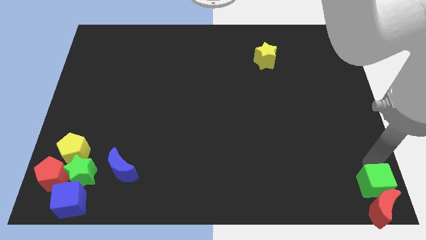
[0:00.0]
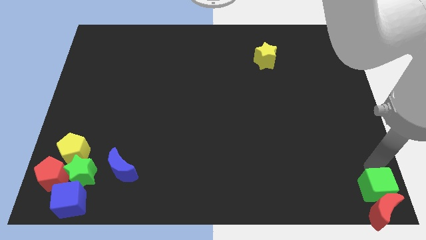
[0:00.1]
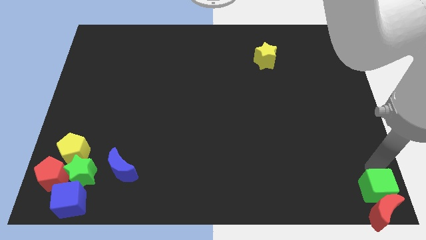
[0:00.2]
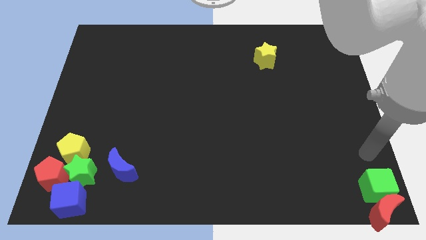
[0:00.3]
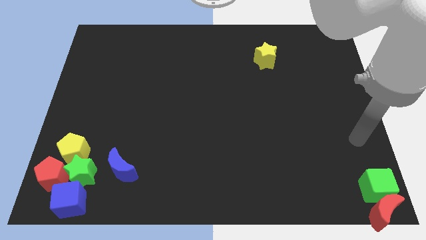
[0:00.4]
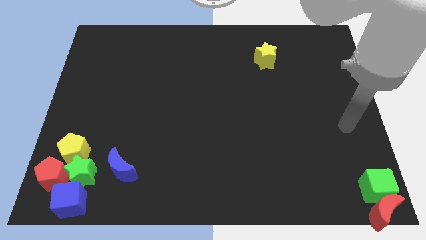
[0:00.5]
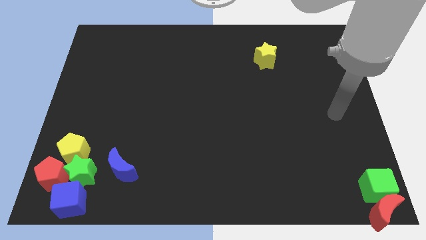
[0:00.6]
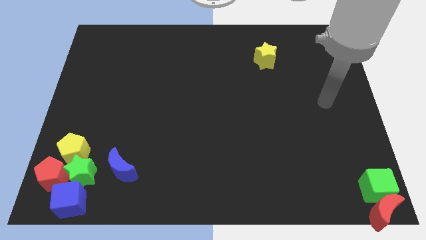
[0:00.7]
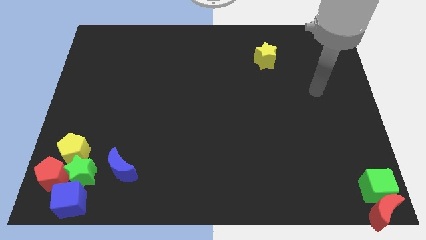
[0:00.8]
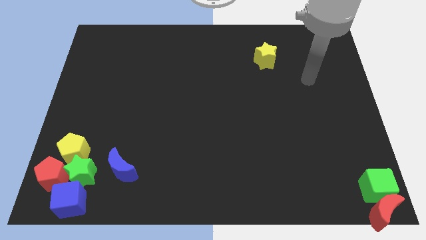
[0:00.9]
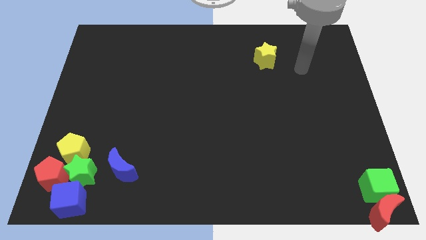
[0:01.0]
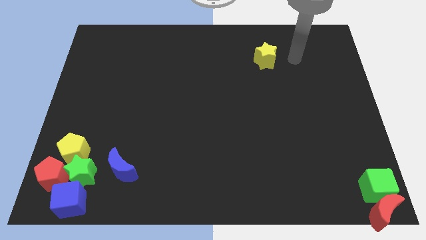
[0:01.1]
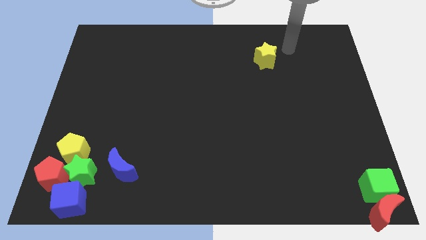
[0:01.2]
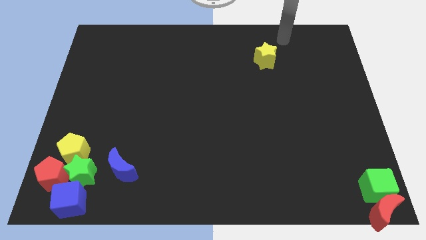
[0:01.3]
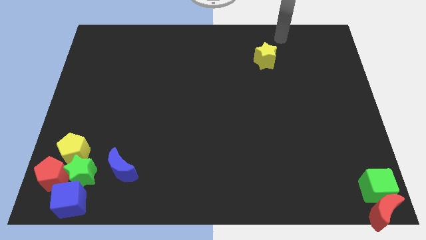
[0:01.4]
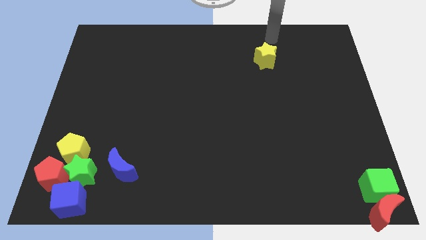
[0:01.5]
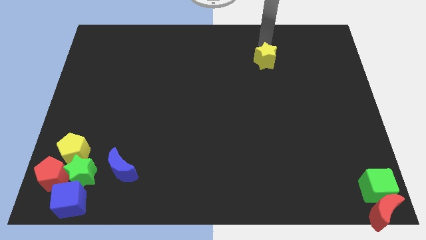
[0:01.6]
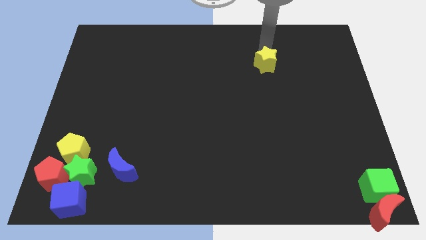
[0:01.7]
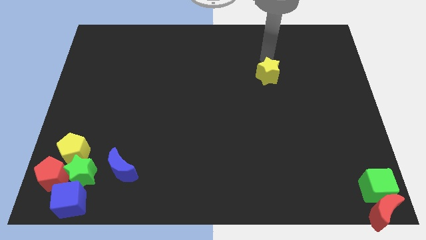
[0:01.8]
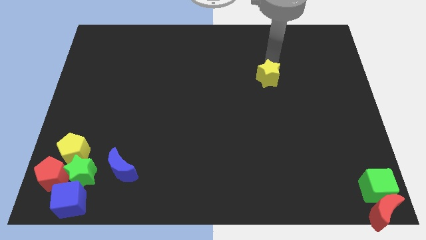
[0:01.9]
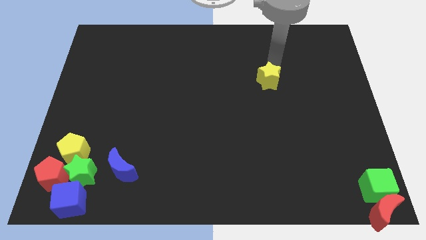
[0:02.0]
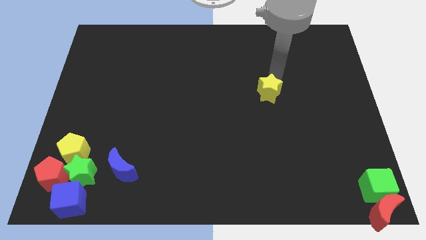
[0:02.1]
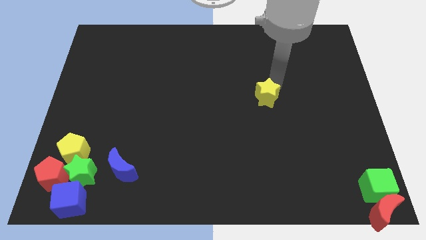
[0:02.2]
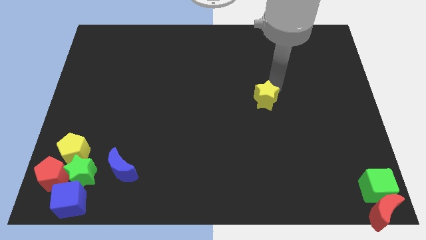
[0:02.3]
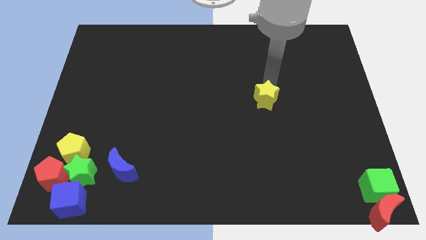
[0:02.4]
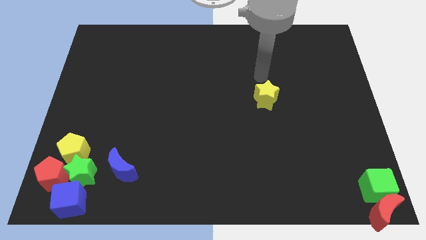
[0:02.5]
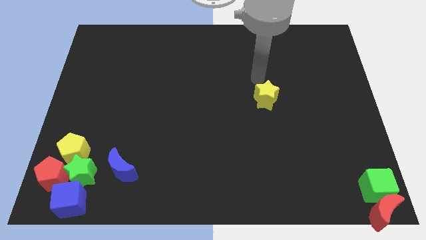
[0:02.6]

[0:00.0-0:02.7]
move the arm away from the green cube

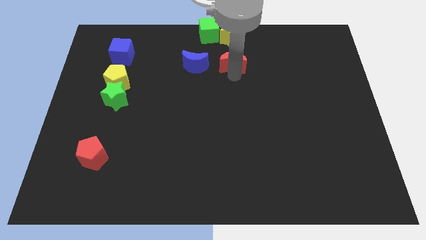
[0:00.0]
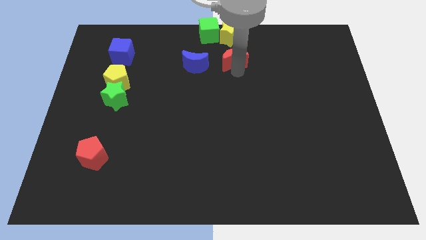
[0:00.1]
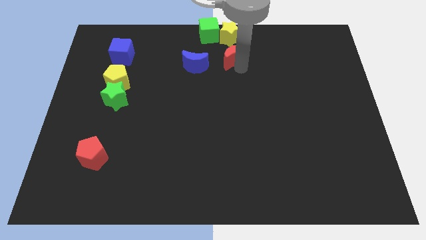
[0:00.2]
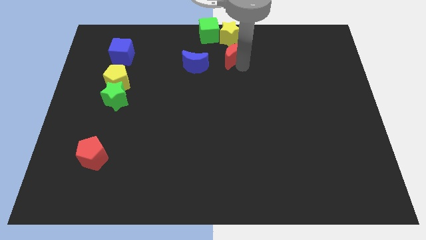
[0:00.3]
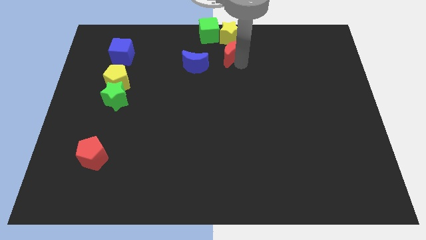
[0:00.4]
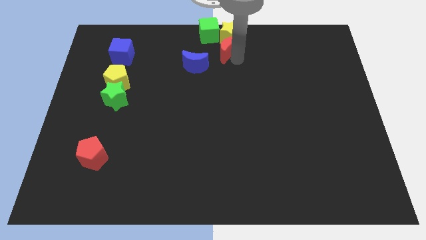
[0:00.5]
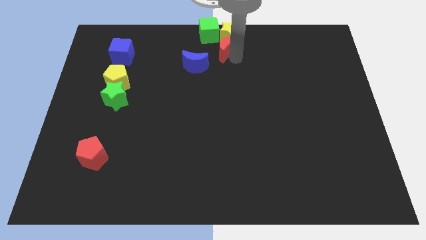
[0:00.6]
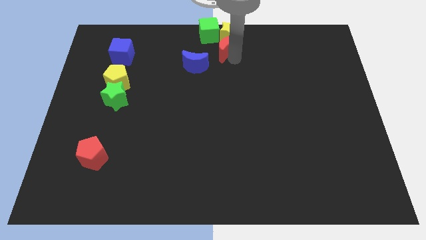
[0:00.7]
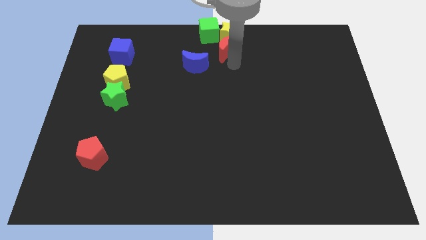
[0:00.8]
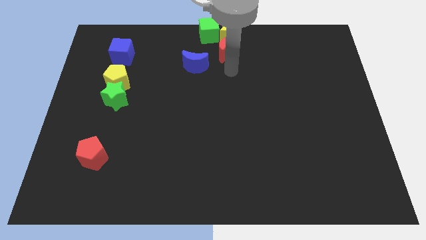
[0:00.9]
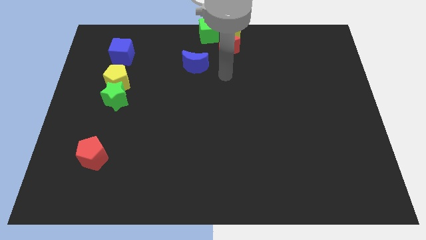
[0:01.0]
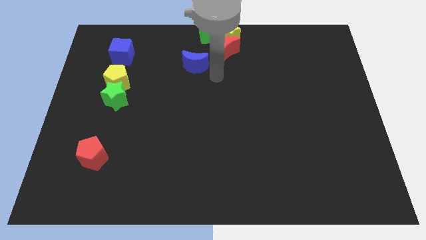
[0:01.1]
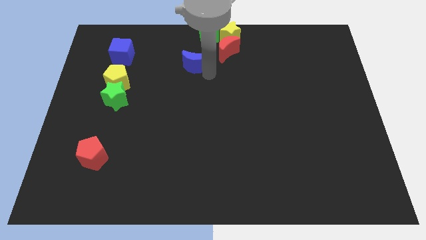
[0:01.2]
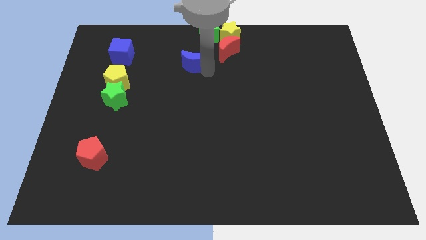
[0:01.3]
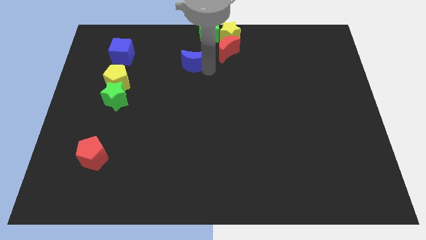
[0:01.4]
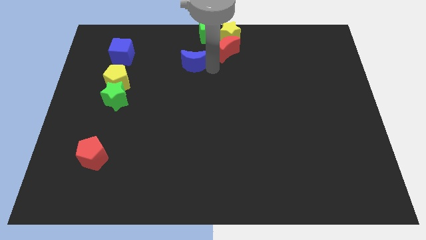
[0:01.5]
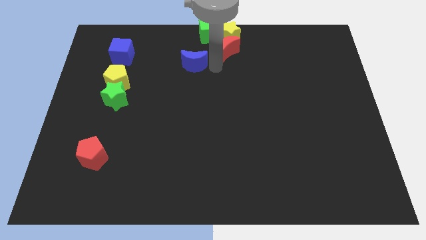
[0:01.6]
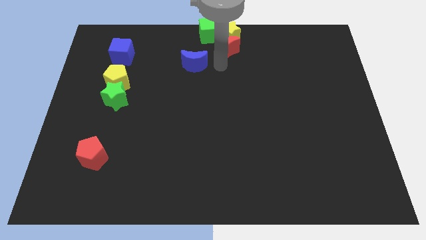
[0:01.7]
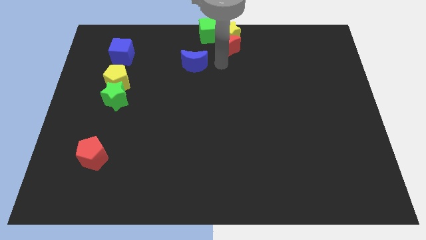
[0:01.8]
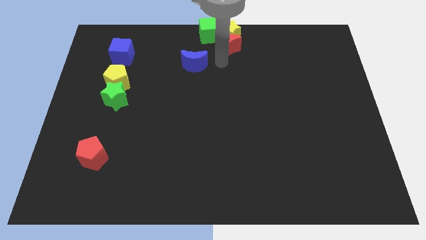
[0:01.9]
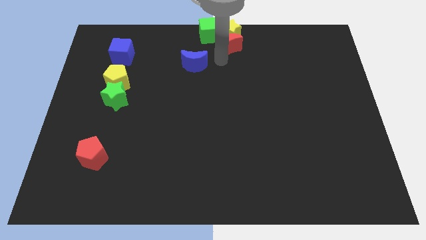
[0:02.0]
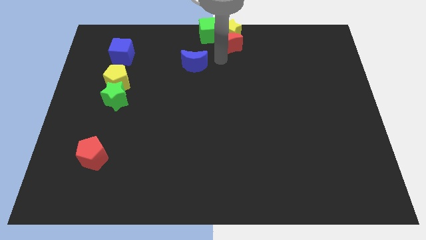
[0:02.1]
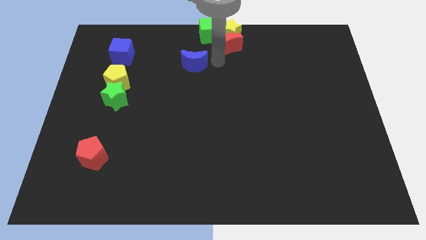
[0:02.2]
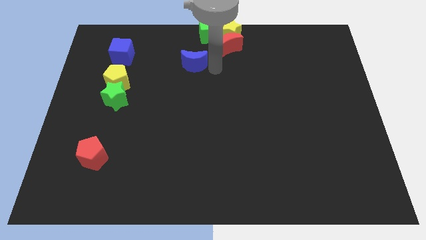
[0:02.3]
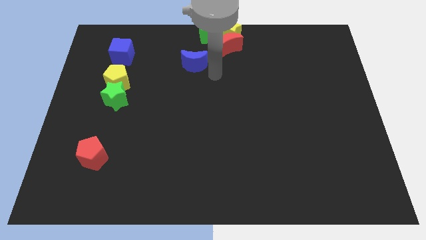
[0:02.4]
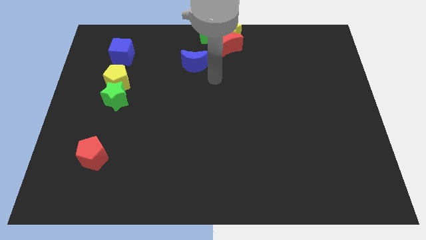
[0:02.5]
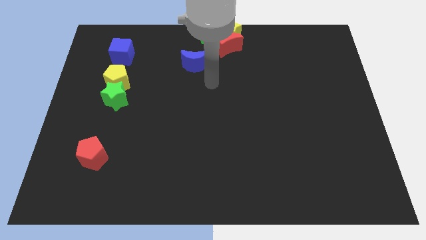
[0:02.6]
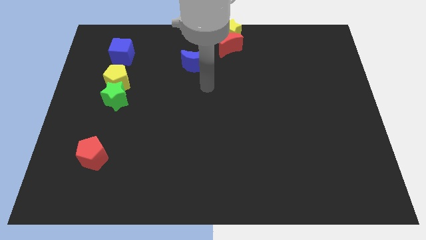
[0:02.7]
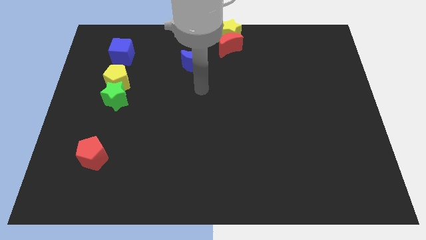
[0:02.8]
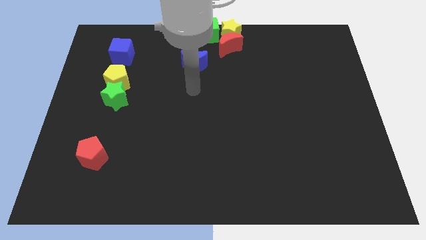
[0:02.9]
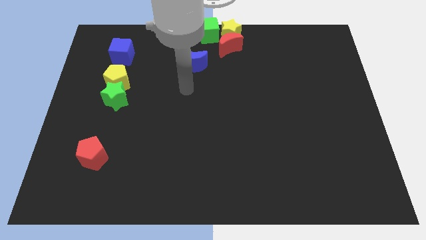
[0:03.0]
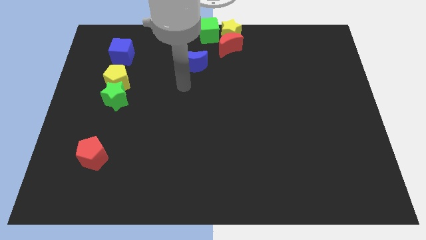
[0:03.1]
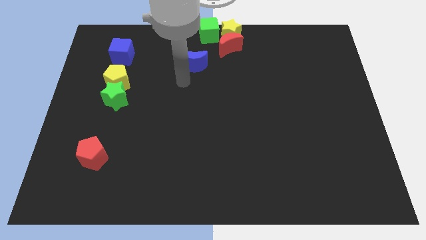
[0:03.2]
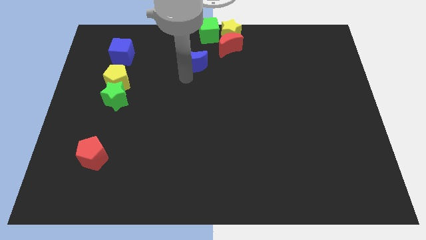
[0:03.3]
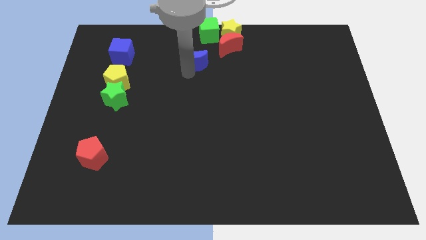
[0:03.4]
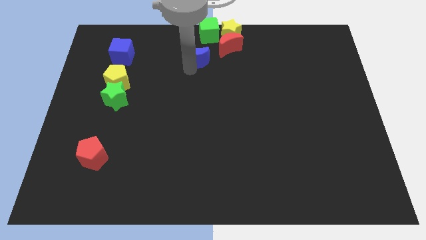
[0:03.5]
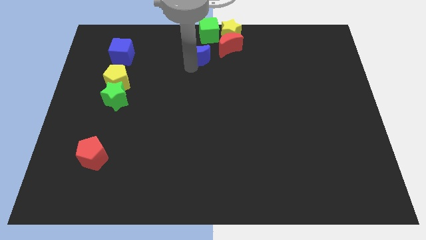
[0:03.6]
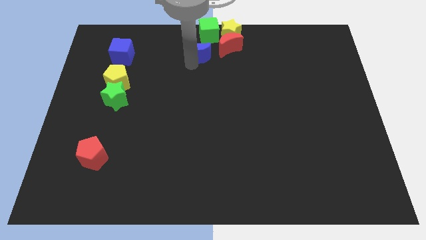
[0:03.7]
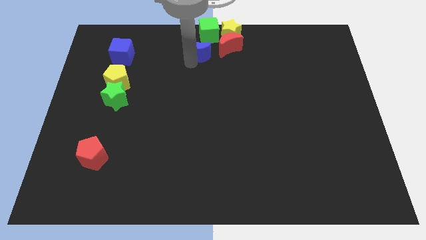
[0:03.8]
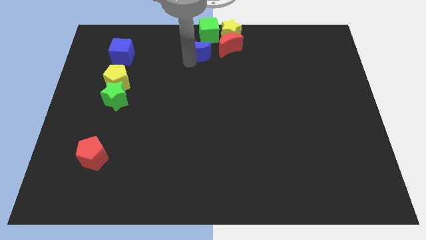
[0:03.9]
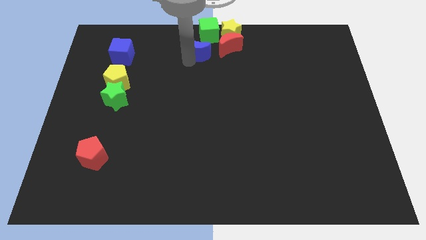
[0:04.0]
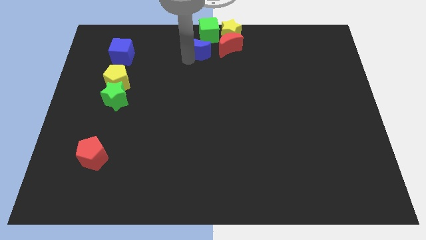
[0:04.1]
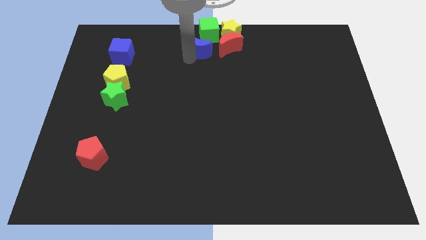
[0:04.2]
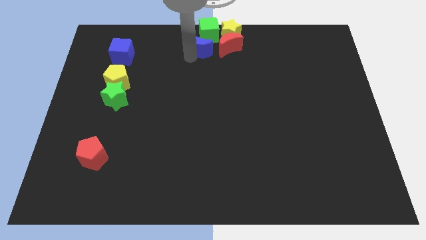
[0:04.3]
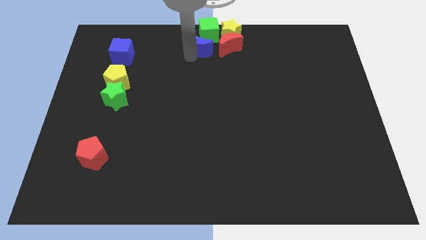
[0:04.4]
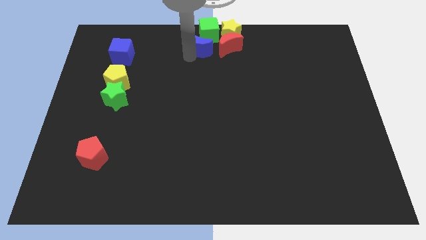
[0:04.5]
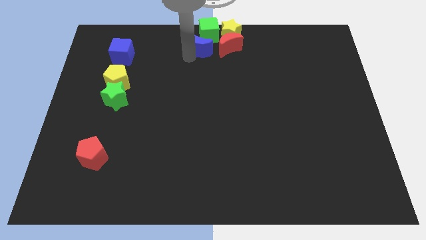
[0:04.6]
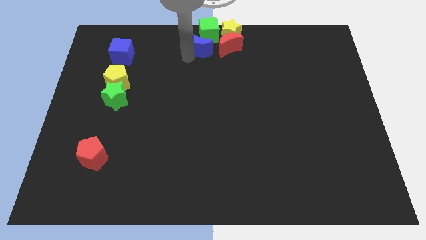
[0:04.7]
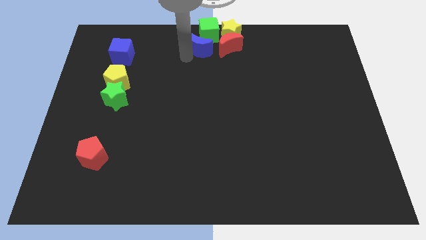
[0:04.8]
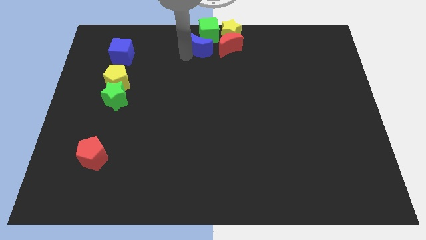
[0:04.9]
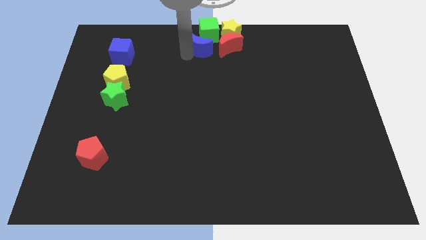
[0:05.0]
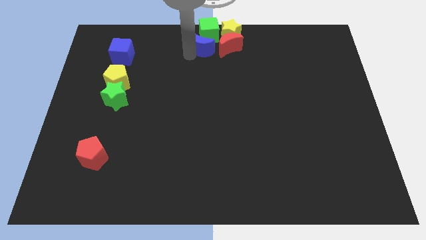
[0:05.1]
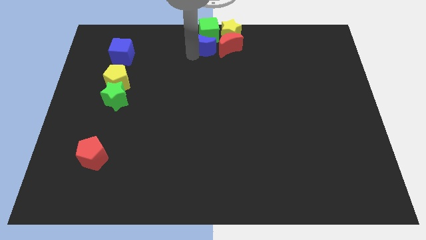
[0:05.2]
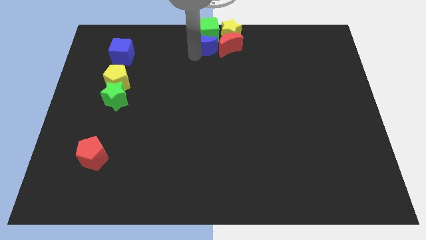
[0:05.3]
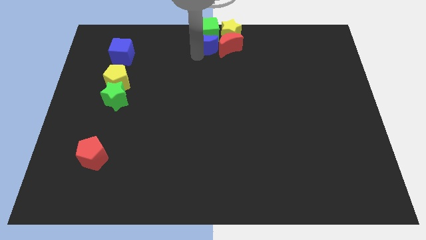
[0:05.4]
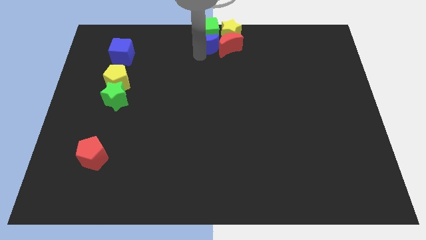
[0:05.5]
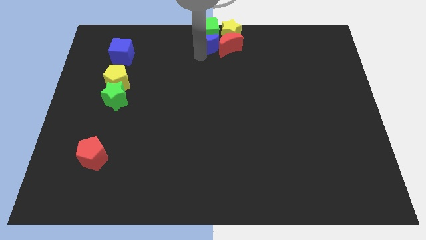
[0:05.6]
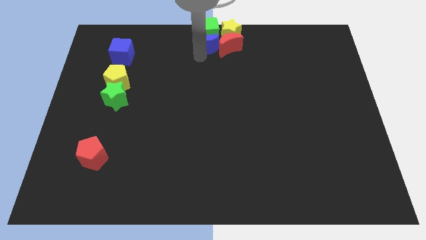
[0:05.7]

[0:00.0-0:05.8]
drag the red crescent and blue crescent to top center

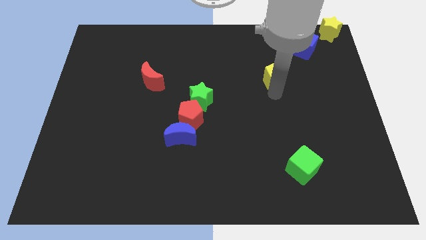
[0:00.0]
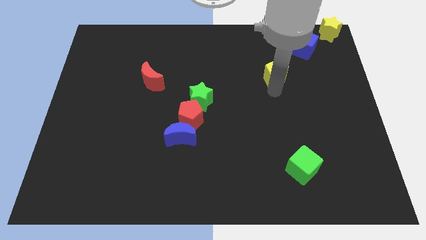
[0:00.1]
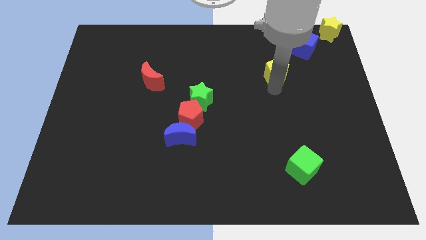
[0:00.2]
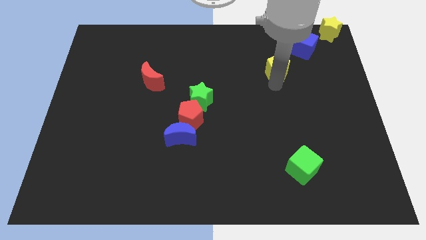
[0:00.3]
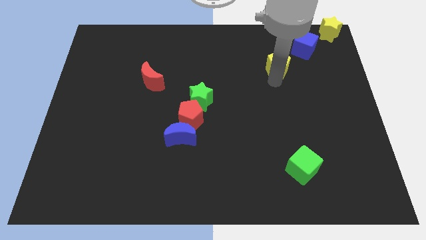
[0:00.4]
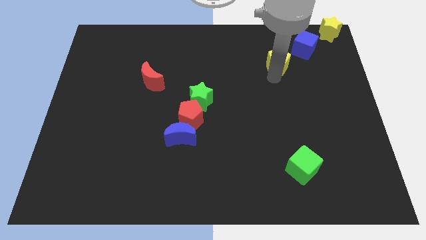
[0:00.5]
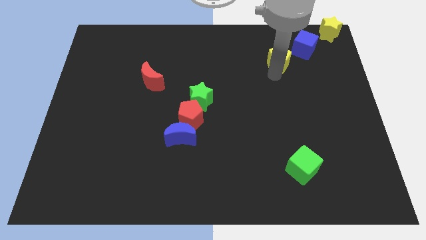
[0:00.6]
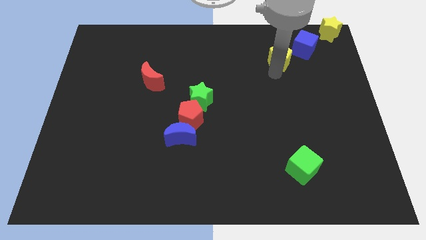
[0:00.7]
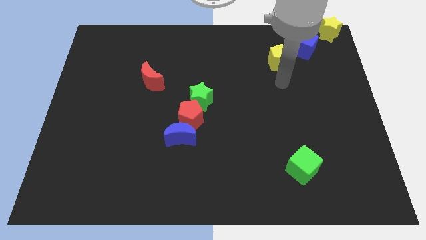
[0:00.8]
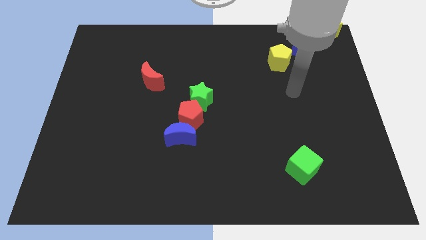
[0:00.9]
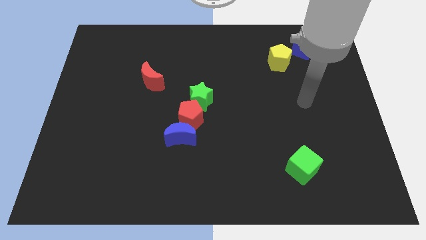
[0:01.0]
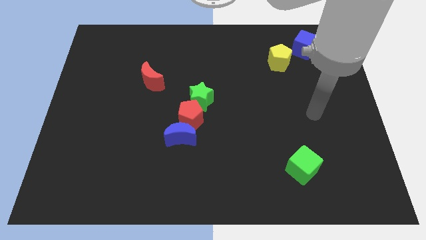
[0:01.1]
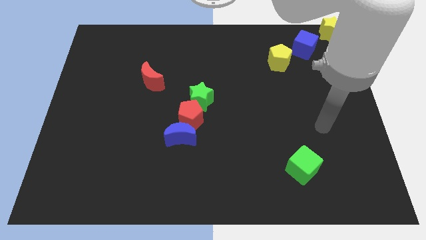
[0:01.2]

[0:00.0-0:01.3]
place yellow pentagon in diagonal position with the blue cube
